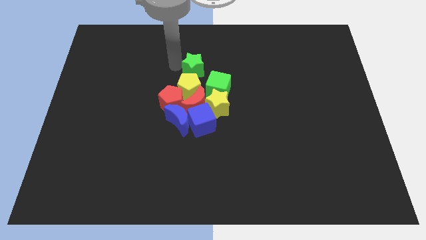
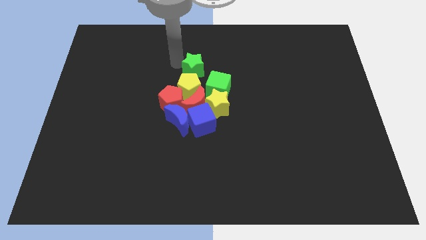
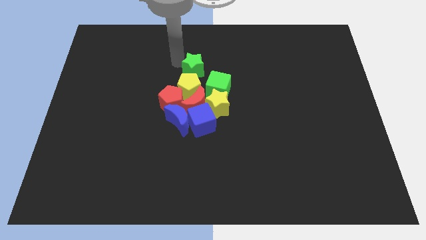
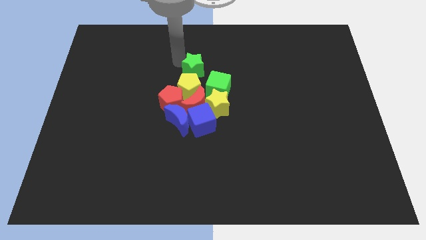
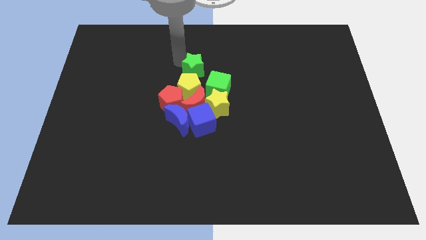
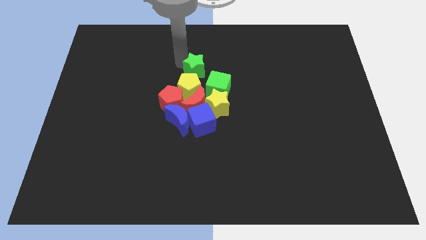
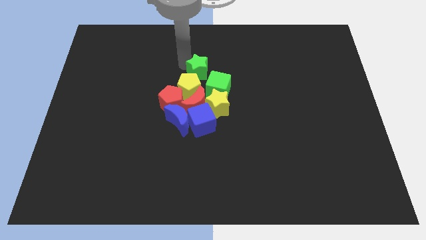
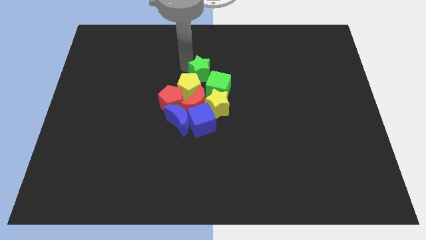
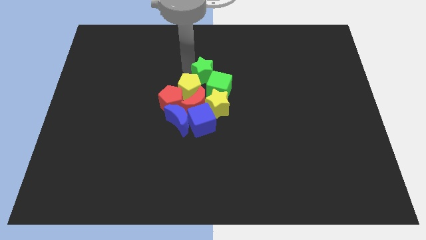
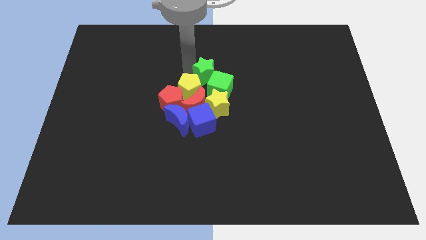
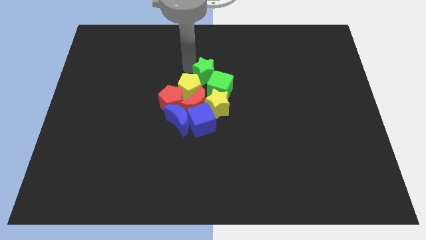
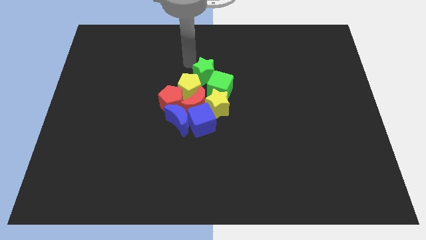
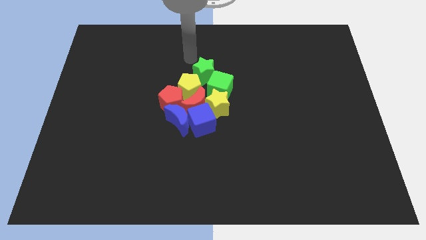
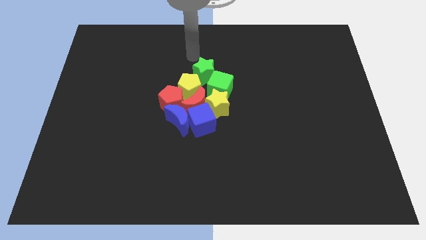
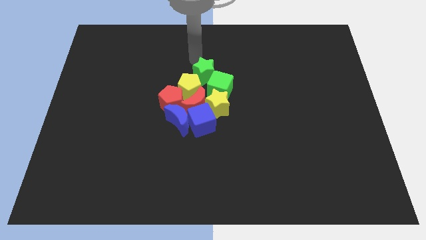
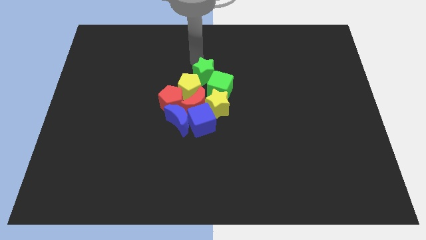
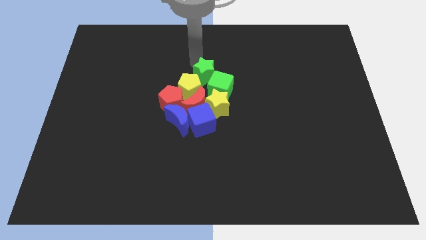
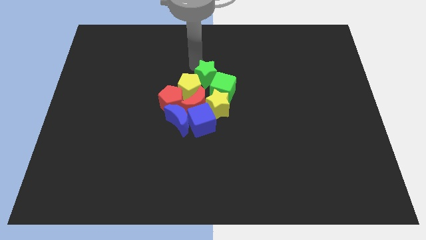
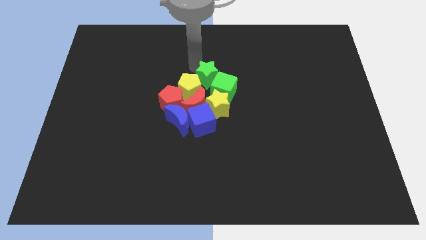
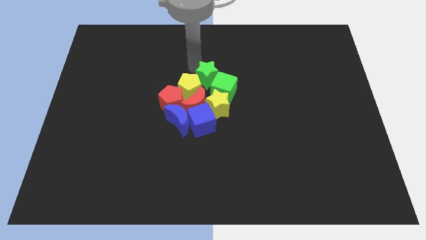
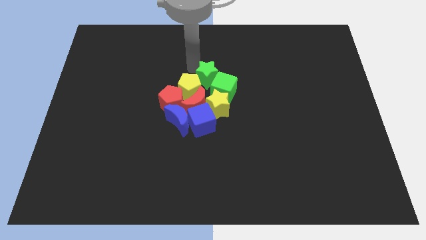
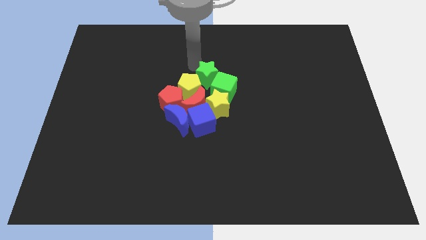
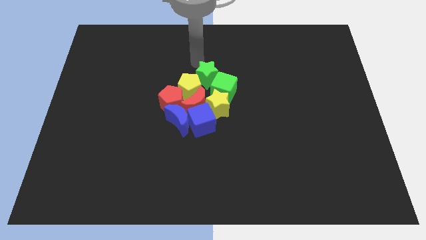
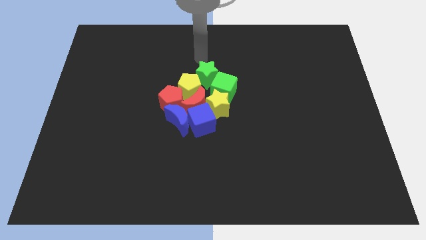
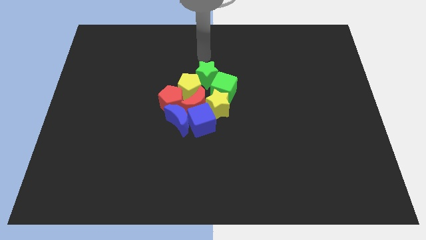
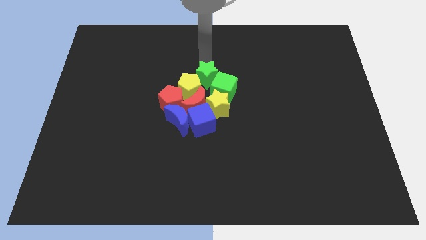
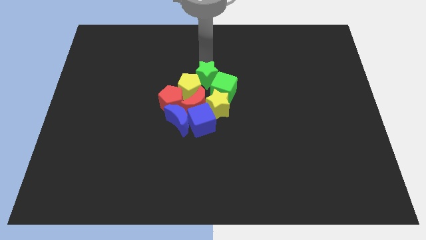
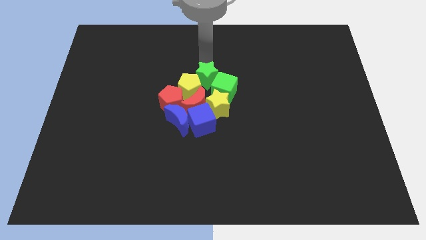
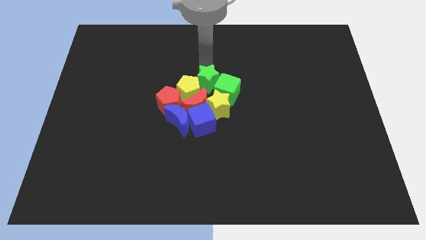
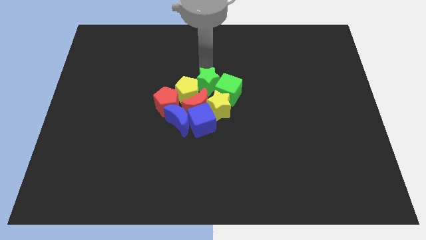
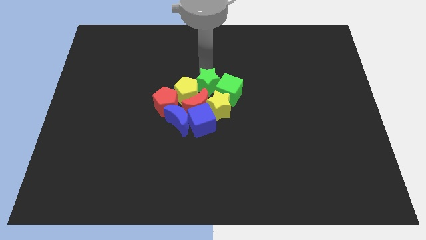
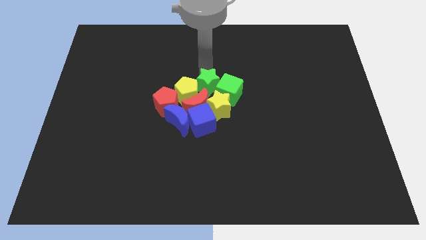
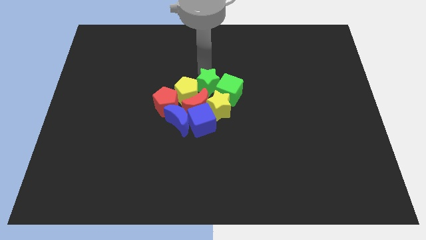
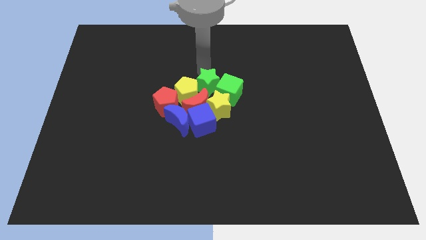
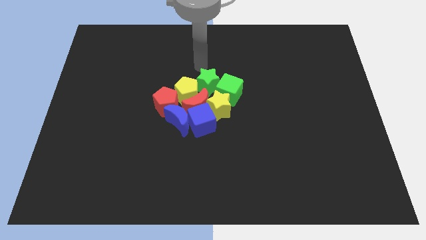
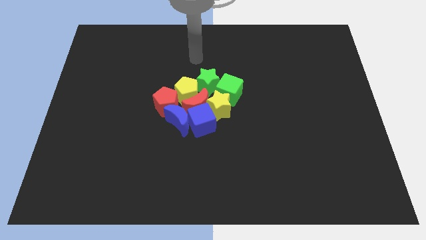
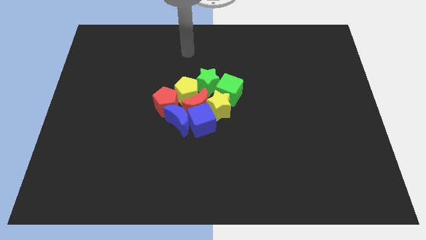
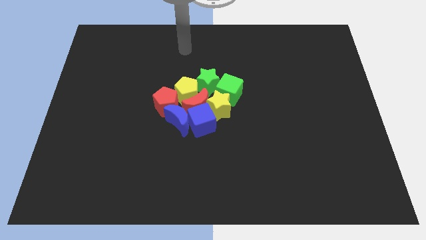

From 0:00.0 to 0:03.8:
group up all the blocks

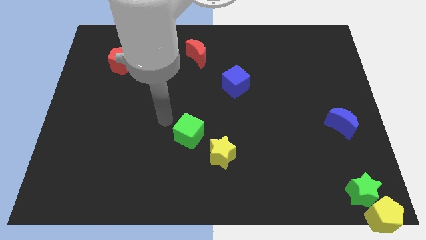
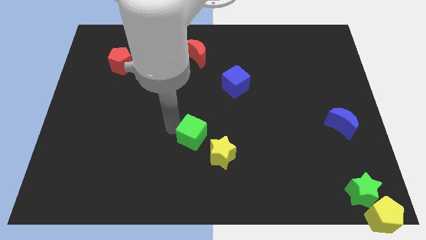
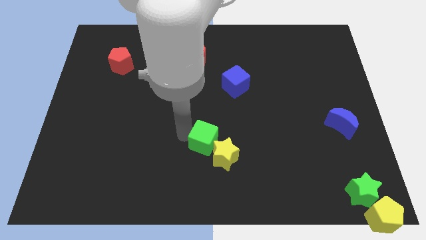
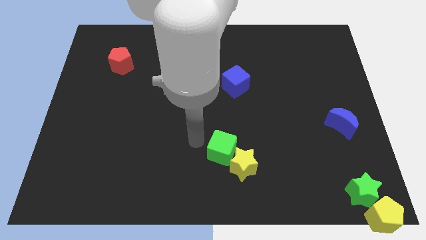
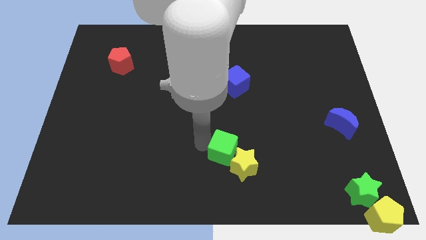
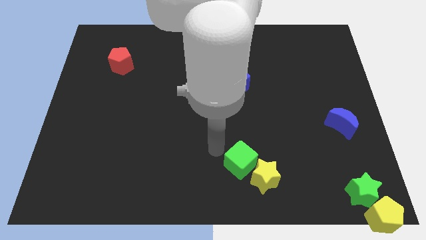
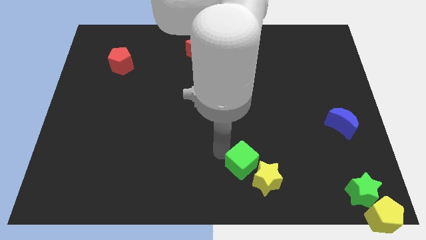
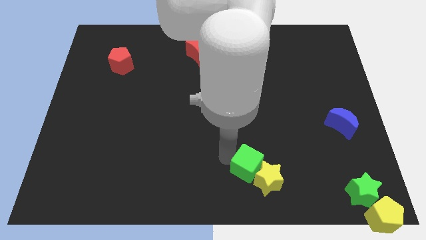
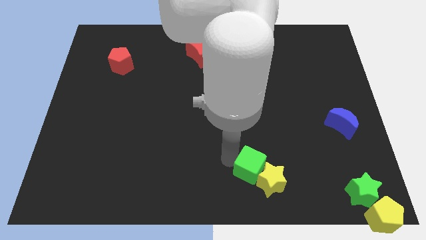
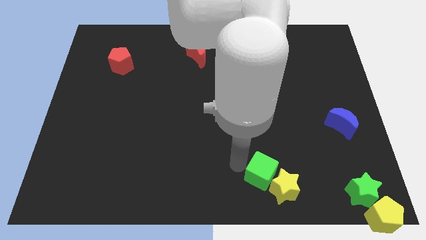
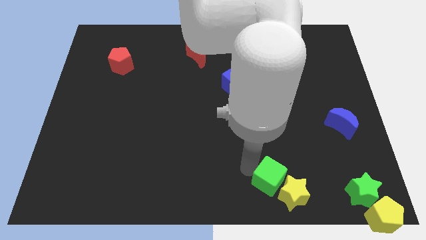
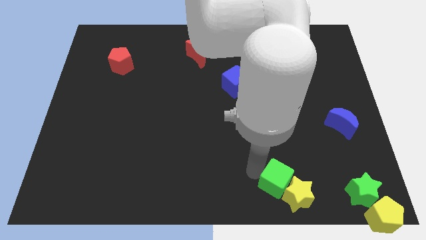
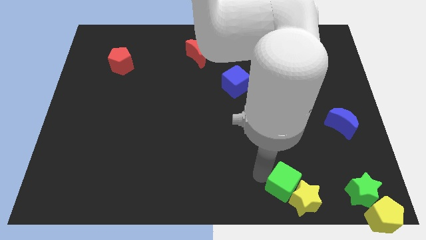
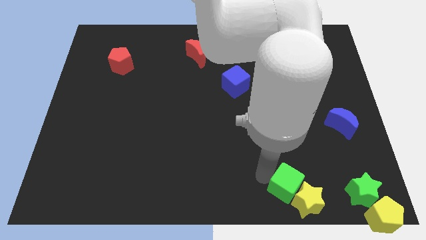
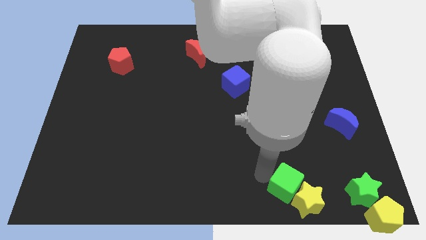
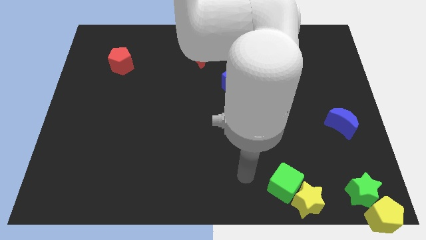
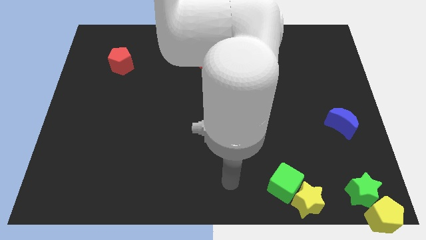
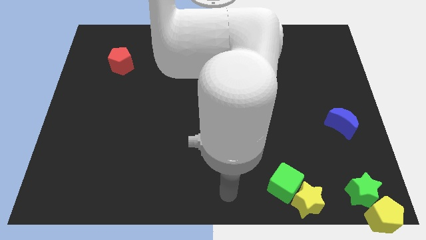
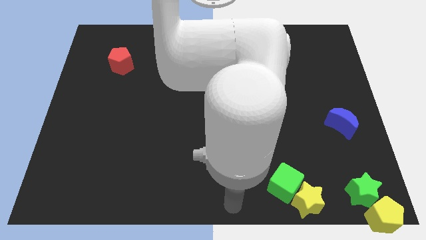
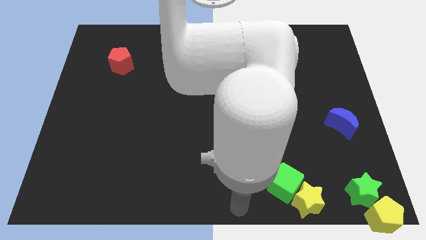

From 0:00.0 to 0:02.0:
push yellow star with the green cube

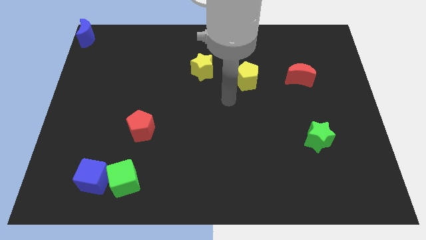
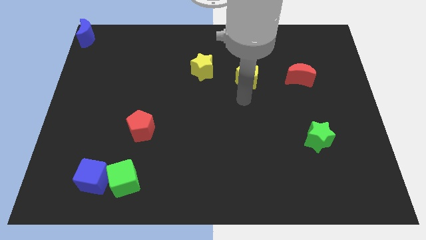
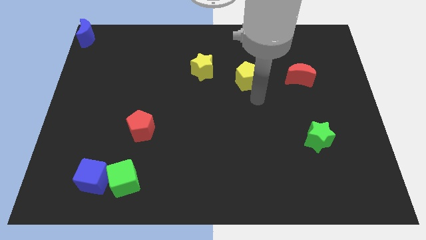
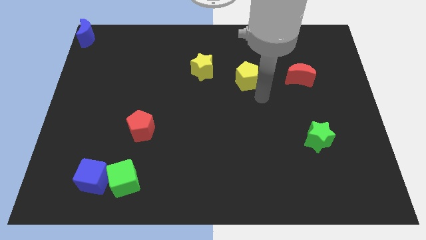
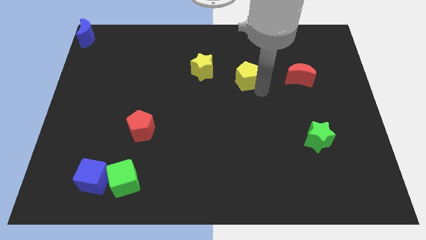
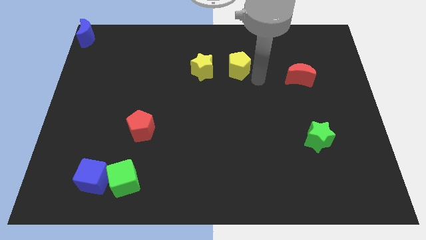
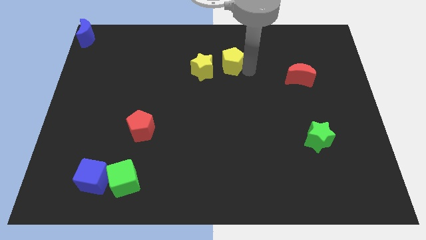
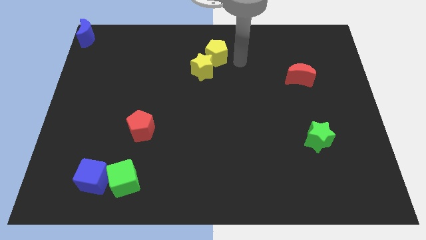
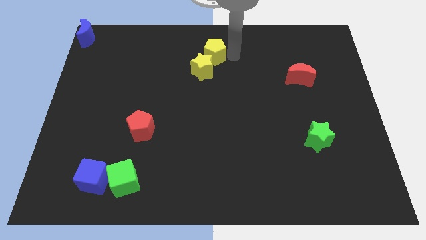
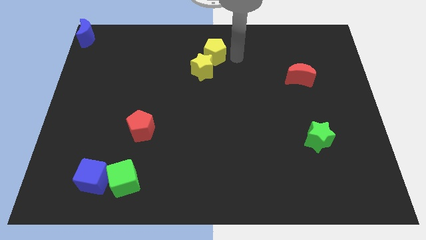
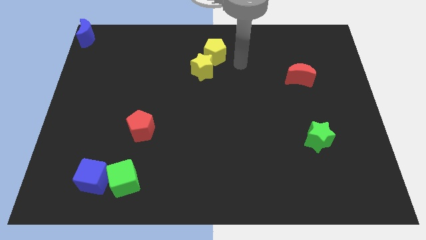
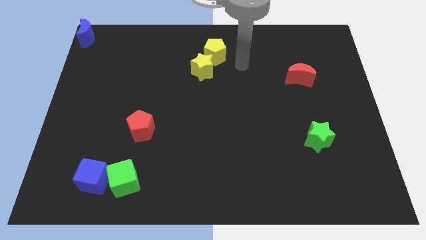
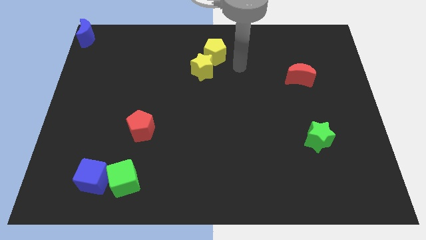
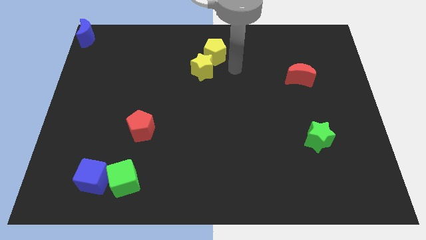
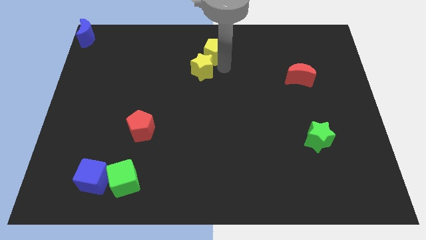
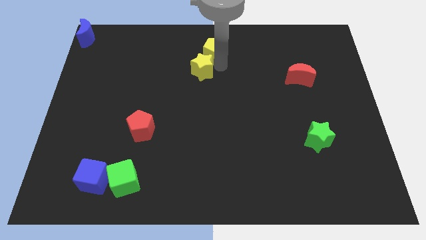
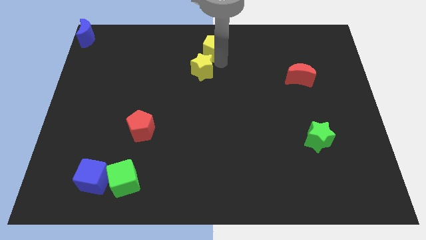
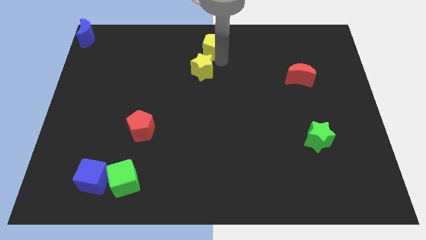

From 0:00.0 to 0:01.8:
place the yellow pentagon towards the top side of the yellow star

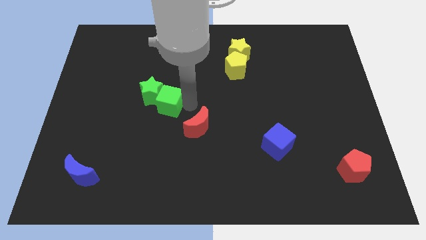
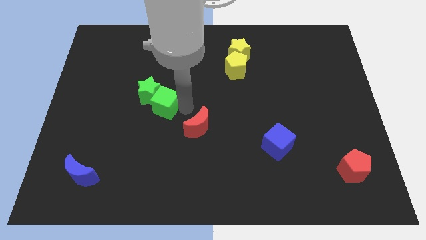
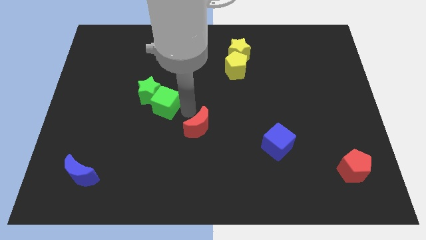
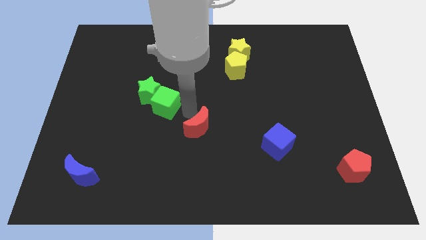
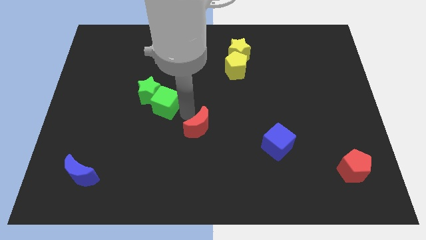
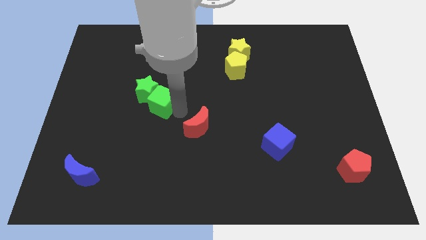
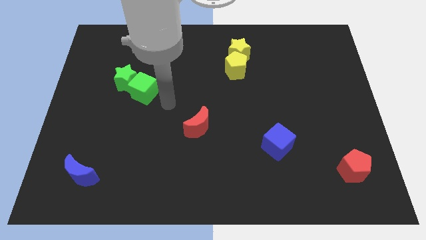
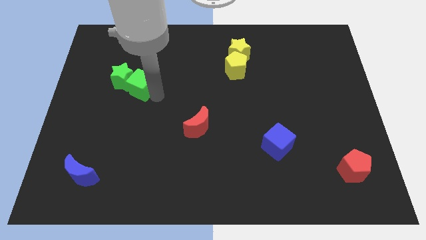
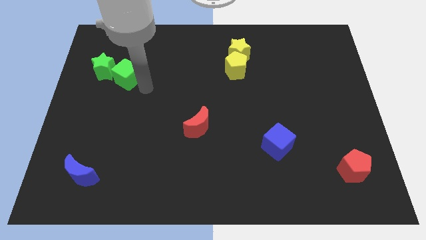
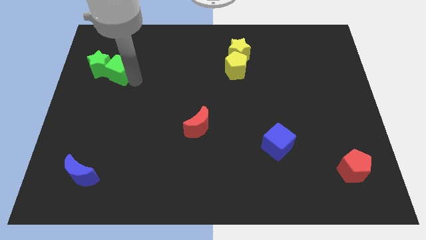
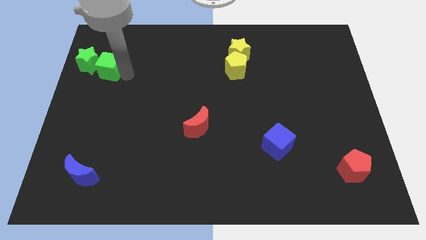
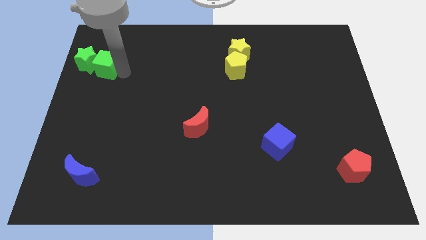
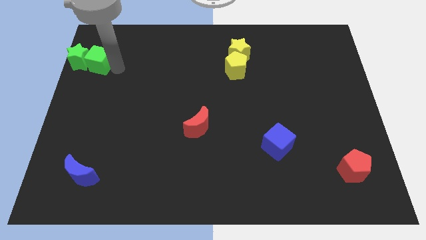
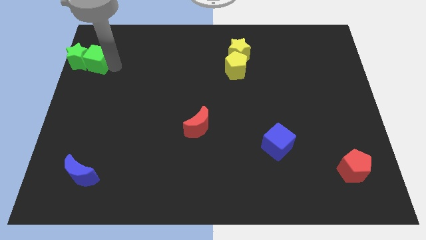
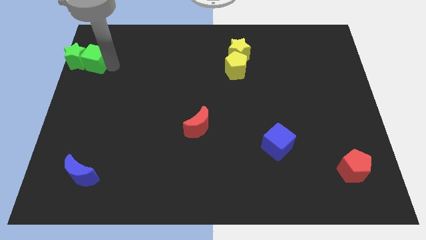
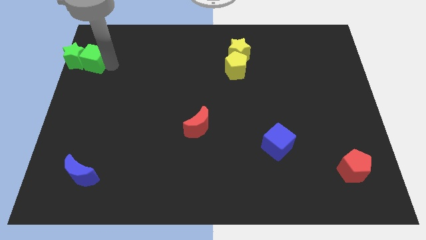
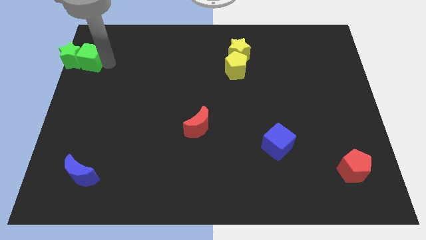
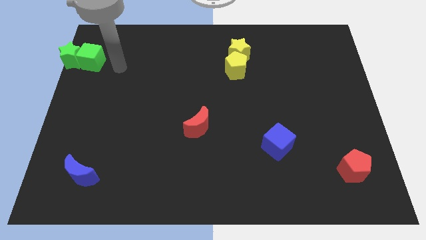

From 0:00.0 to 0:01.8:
drag the green star and green cube to the top left side of the board
